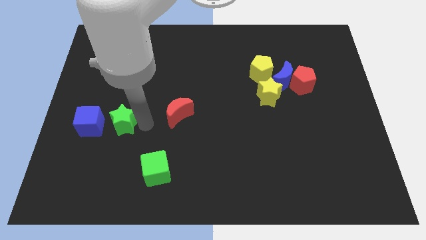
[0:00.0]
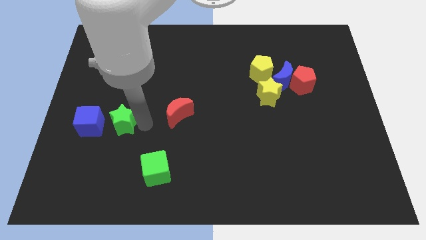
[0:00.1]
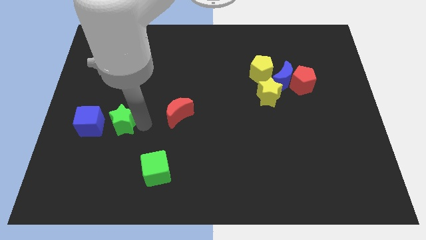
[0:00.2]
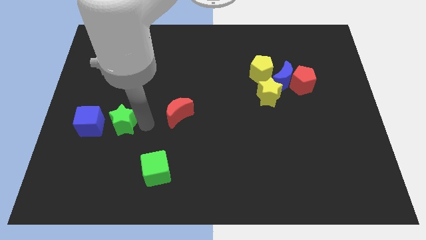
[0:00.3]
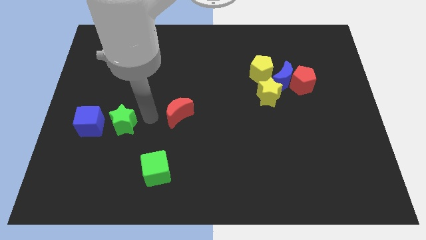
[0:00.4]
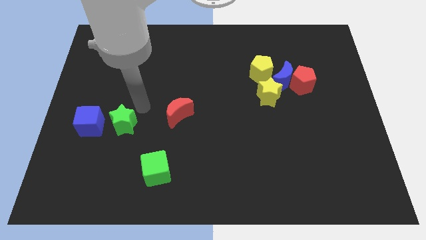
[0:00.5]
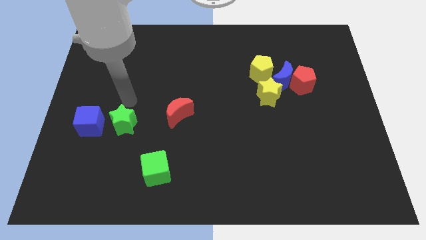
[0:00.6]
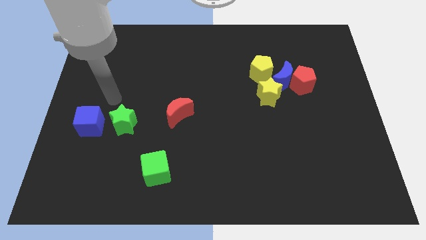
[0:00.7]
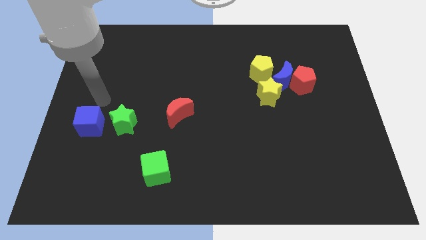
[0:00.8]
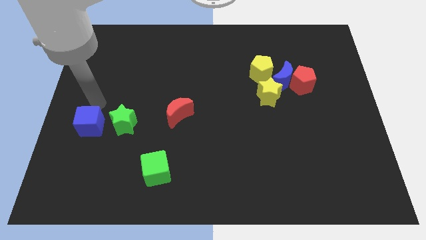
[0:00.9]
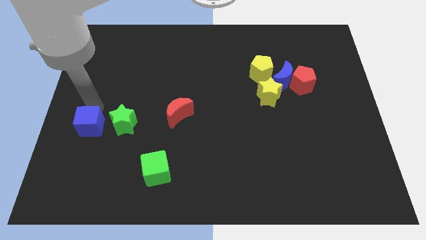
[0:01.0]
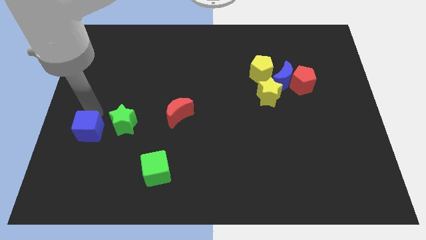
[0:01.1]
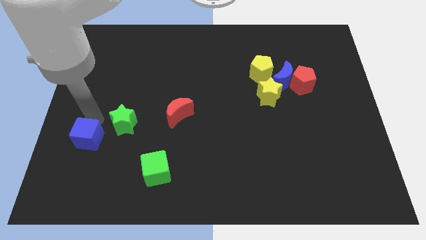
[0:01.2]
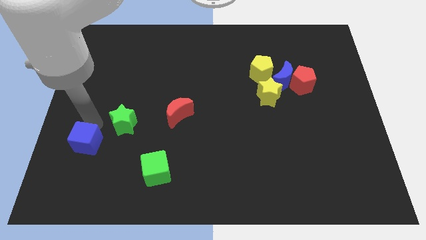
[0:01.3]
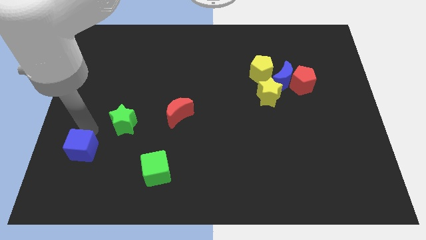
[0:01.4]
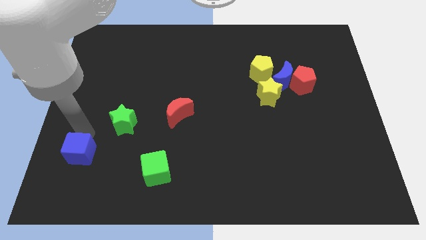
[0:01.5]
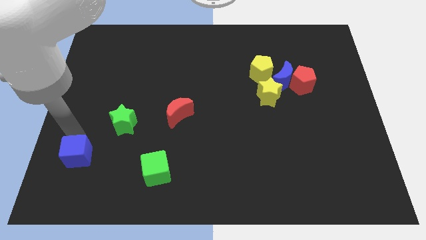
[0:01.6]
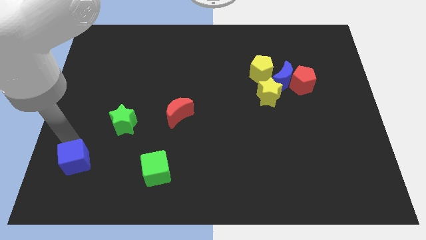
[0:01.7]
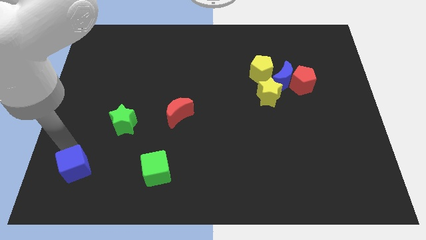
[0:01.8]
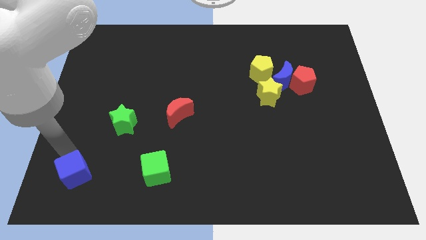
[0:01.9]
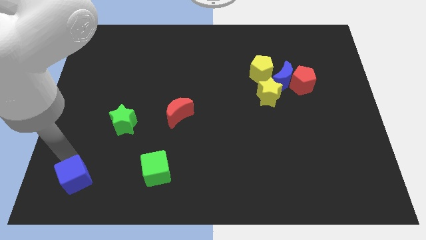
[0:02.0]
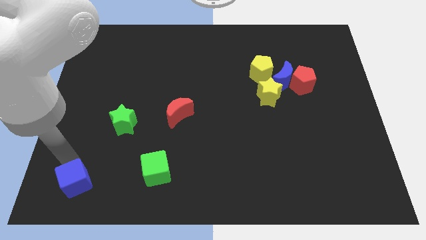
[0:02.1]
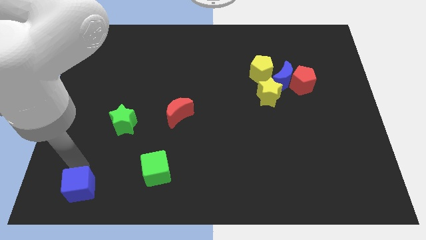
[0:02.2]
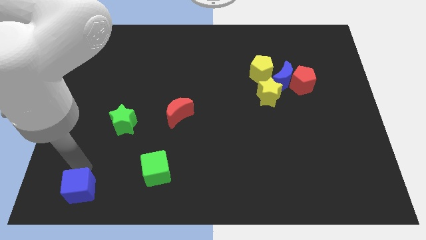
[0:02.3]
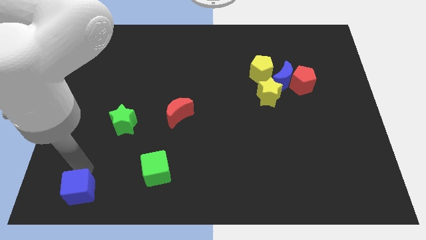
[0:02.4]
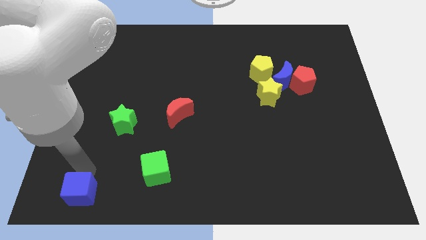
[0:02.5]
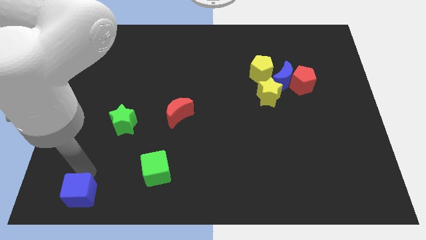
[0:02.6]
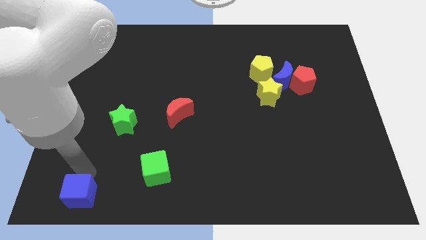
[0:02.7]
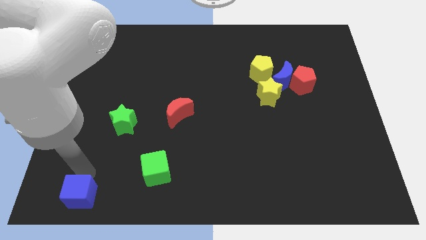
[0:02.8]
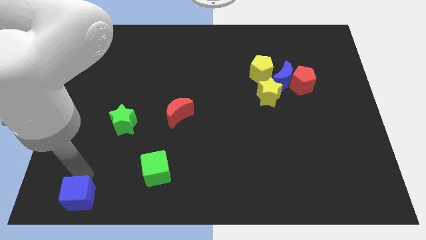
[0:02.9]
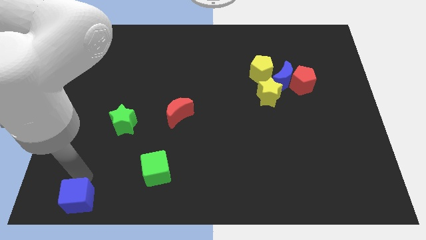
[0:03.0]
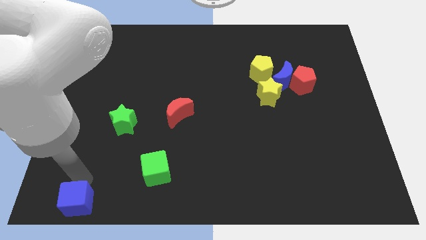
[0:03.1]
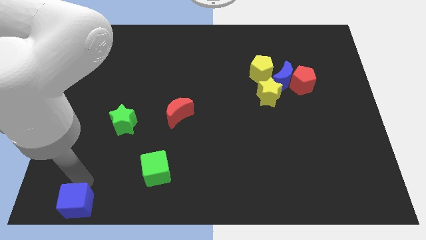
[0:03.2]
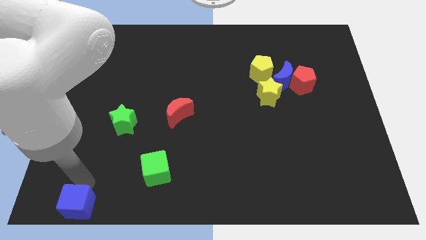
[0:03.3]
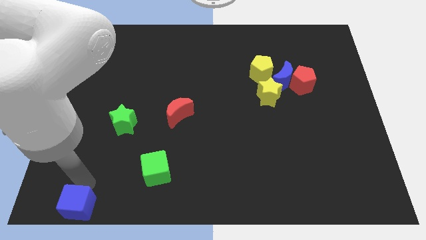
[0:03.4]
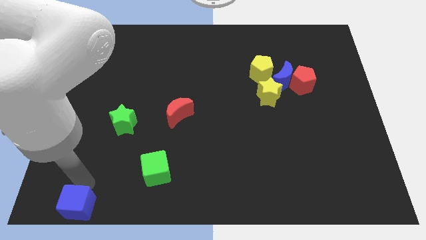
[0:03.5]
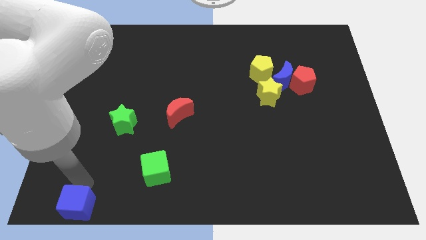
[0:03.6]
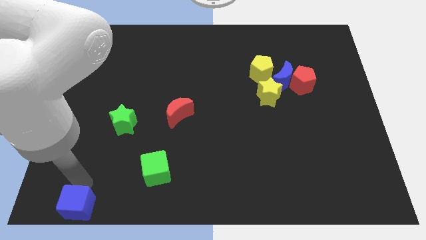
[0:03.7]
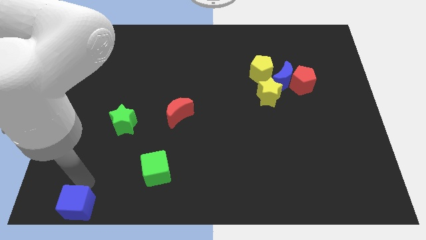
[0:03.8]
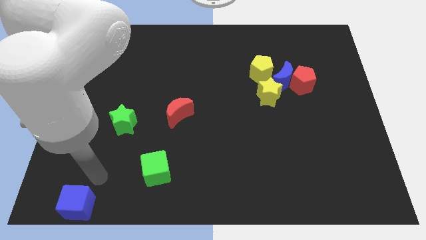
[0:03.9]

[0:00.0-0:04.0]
move the blue cube to the bottom of the board

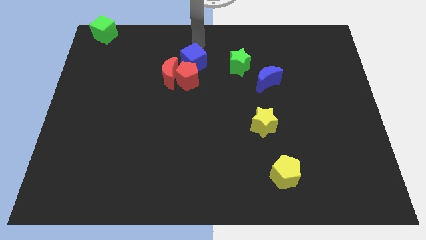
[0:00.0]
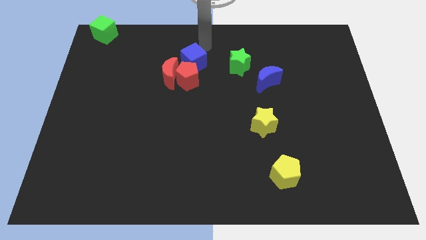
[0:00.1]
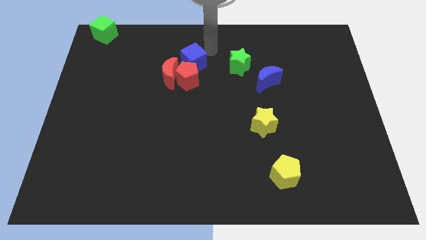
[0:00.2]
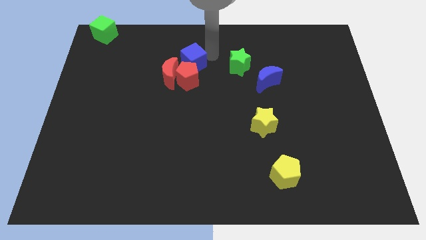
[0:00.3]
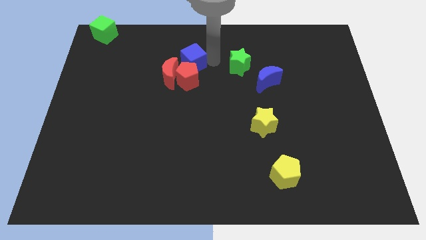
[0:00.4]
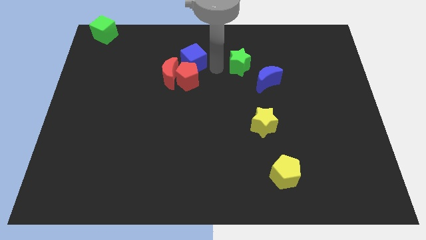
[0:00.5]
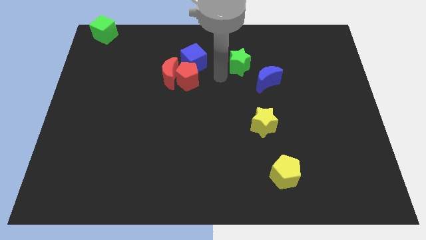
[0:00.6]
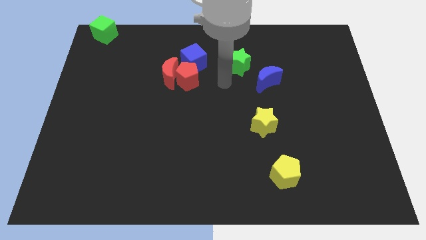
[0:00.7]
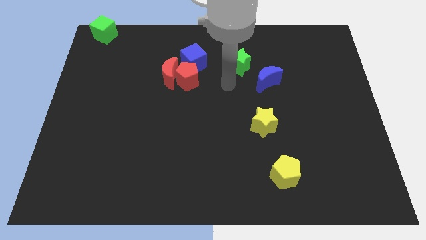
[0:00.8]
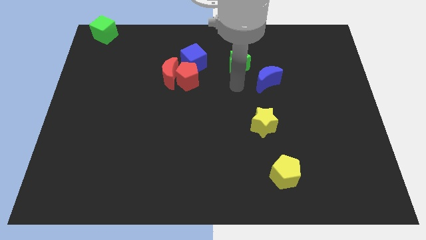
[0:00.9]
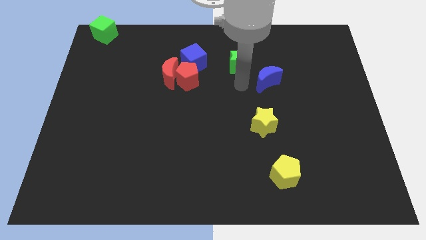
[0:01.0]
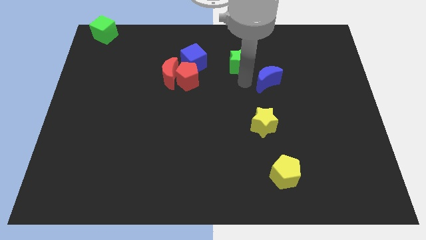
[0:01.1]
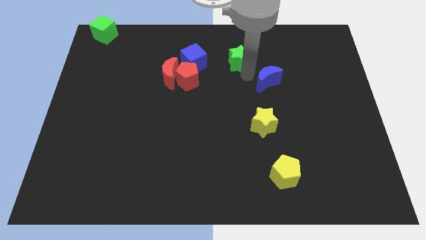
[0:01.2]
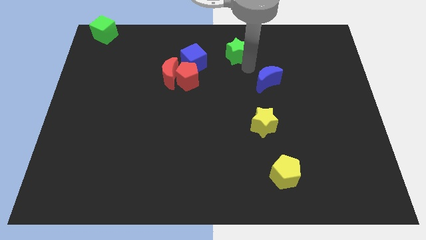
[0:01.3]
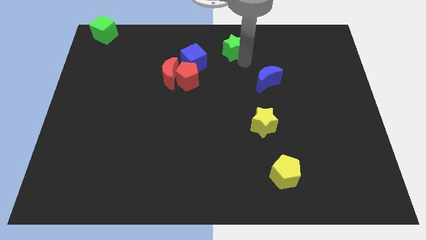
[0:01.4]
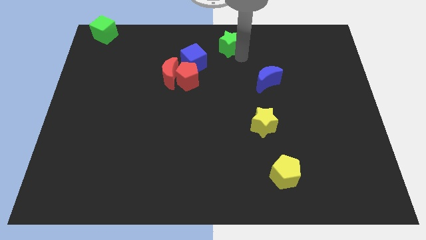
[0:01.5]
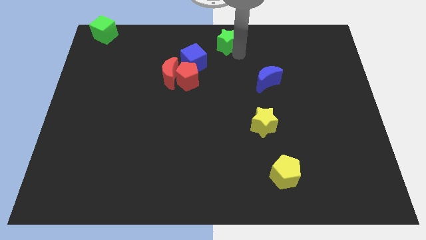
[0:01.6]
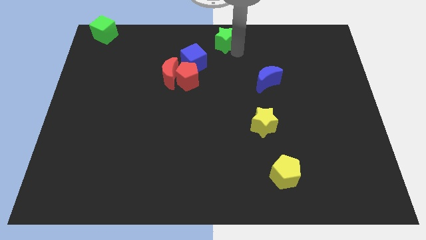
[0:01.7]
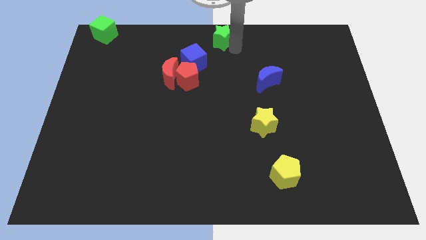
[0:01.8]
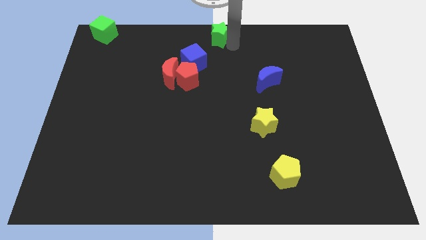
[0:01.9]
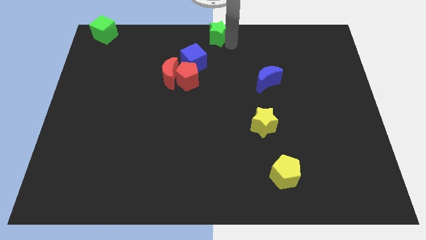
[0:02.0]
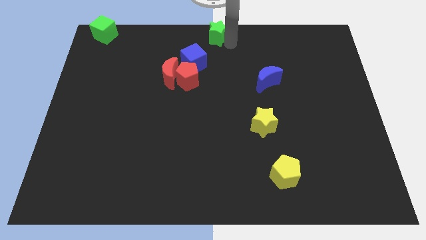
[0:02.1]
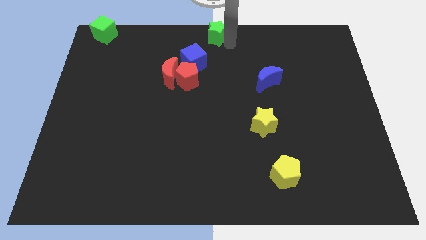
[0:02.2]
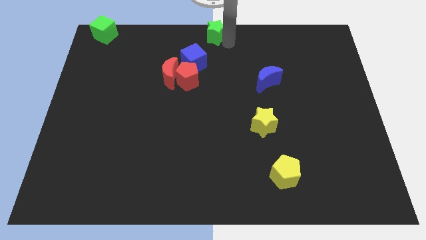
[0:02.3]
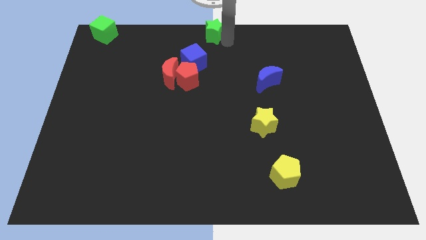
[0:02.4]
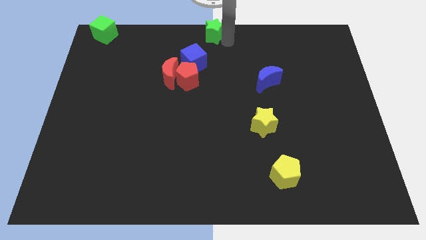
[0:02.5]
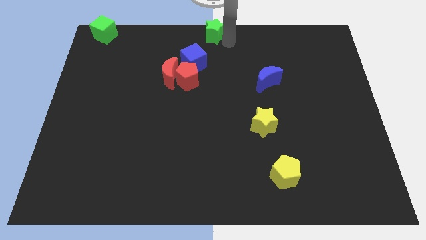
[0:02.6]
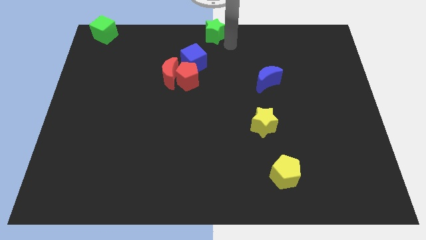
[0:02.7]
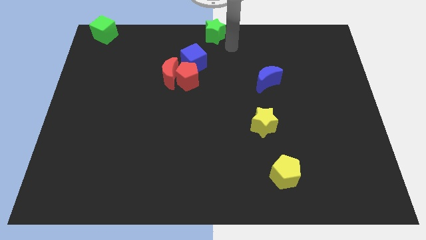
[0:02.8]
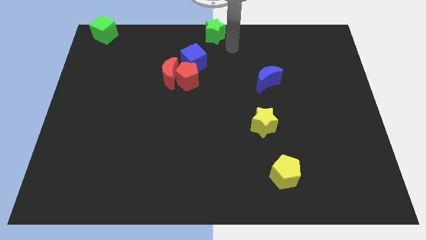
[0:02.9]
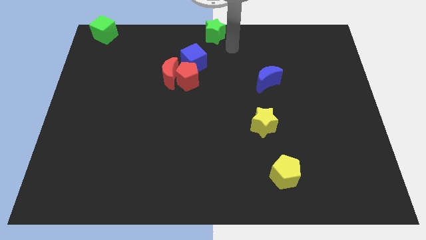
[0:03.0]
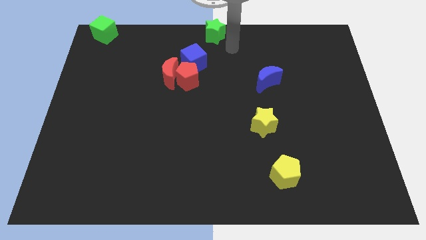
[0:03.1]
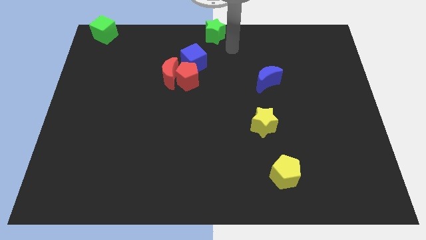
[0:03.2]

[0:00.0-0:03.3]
place the green star top center above the blue cube

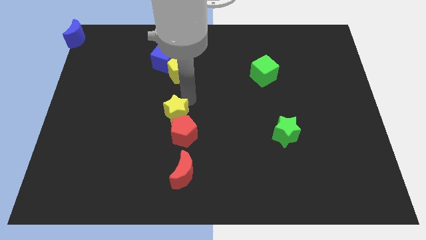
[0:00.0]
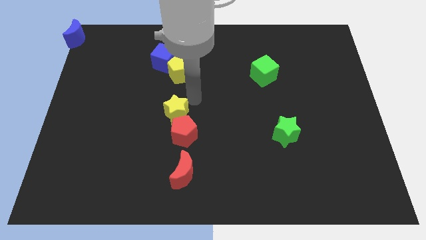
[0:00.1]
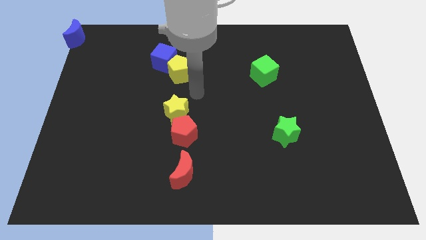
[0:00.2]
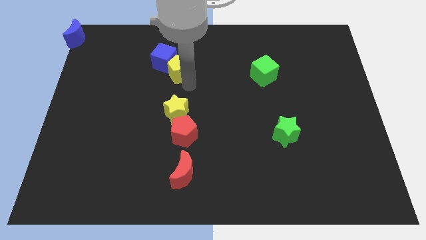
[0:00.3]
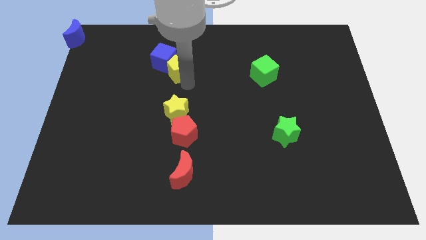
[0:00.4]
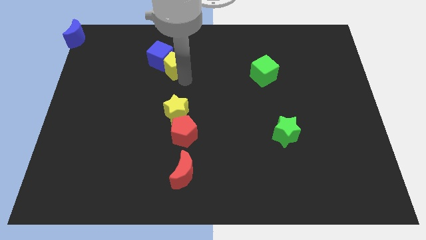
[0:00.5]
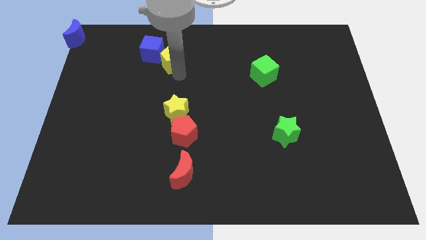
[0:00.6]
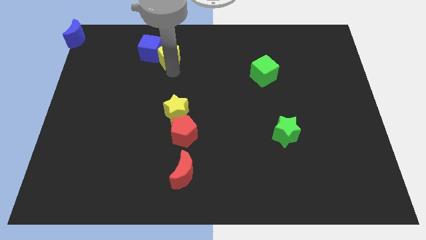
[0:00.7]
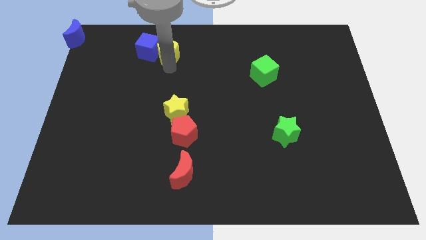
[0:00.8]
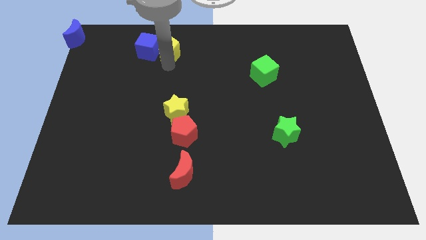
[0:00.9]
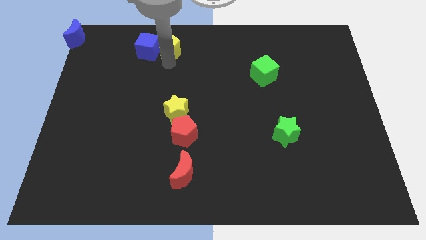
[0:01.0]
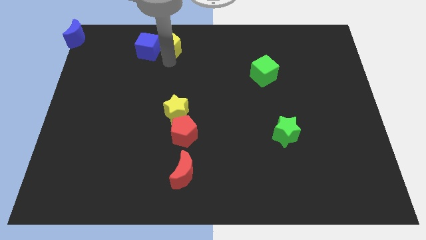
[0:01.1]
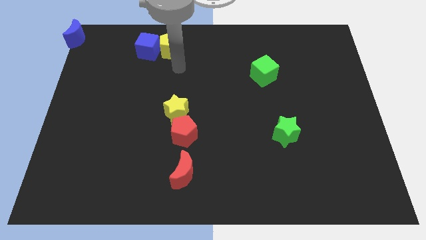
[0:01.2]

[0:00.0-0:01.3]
push the yellow penatgon towards the right to the blue cube

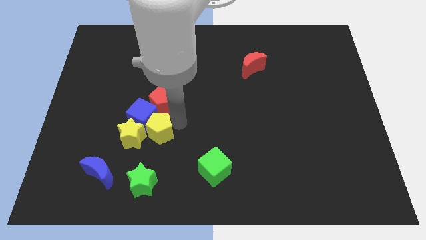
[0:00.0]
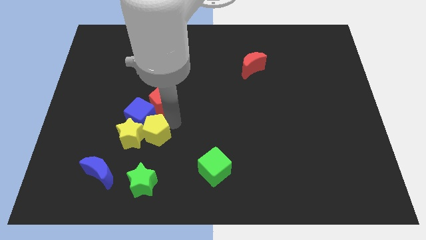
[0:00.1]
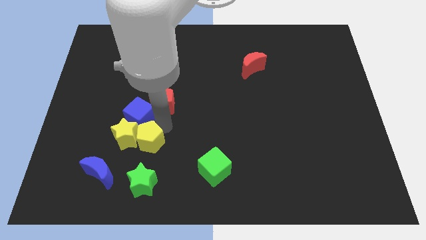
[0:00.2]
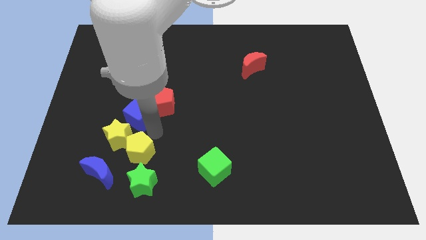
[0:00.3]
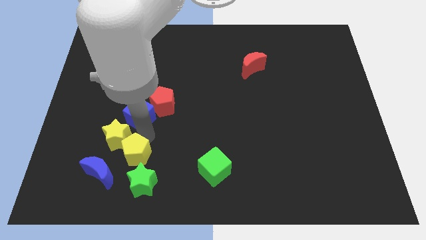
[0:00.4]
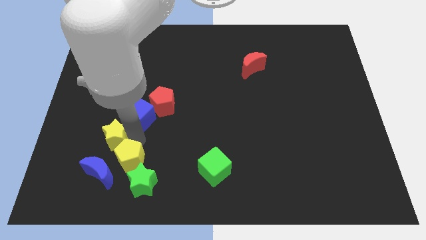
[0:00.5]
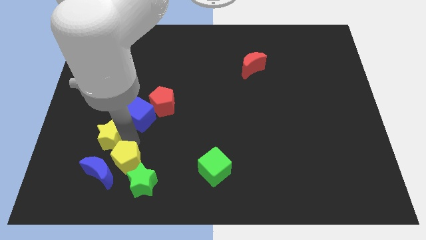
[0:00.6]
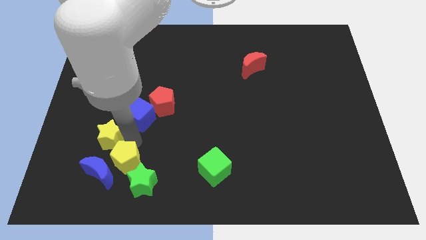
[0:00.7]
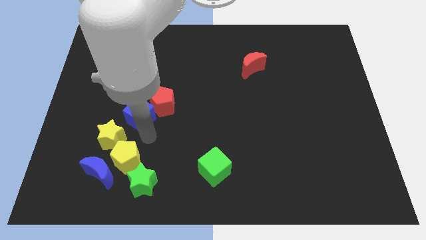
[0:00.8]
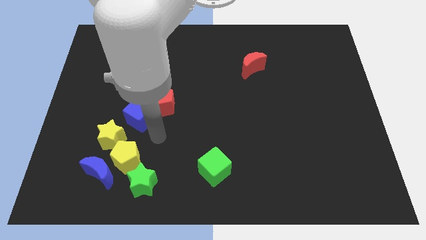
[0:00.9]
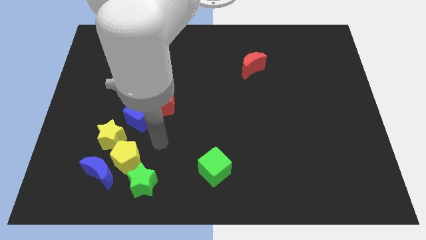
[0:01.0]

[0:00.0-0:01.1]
push the yellow pentagon bottom right of the yellow star
